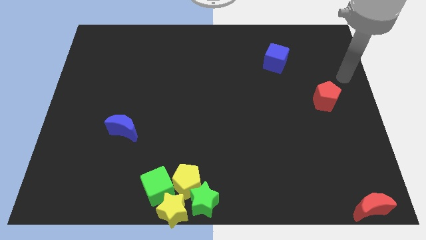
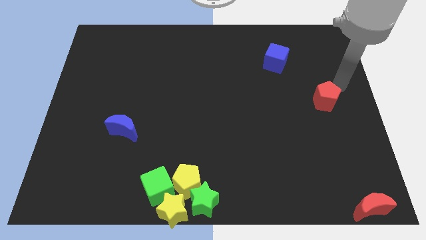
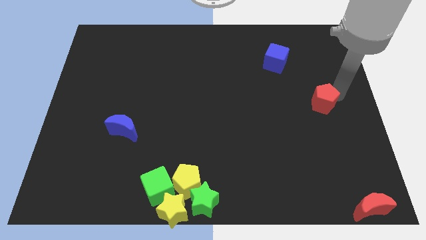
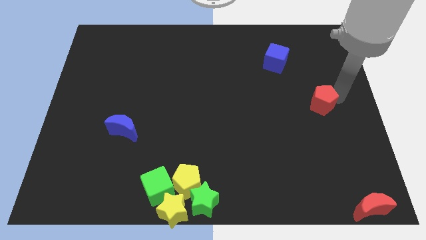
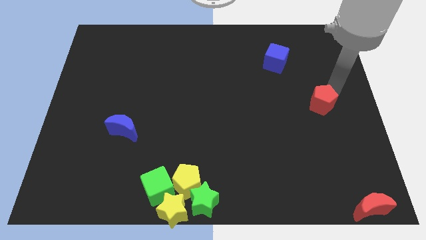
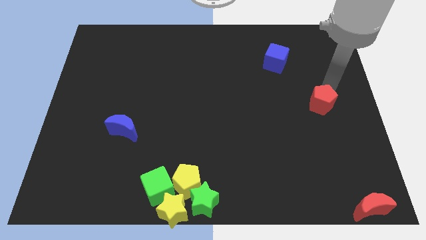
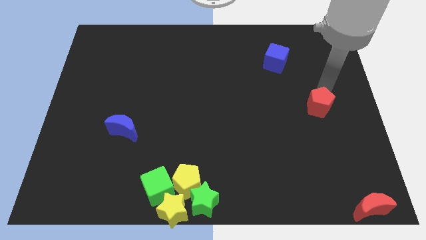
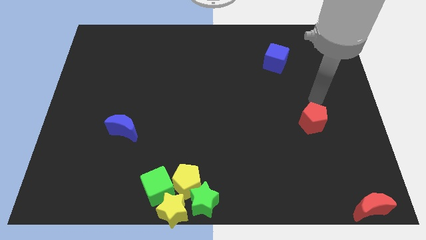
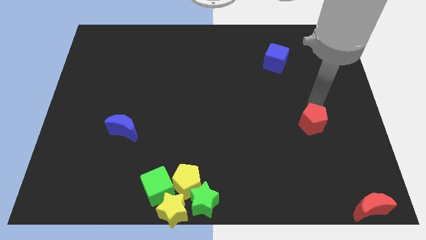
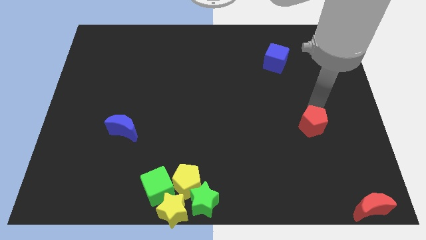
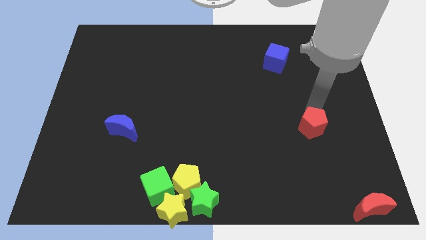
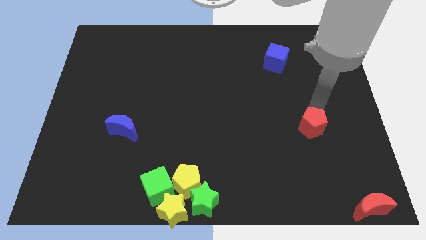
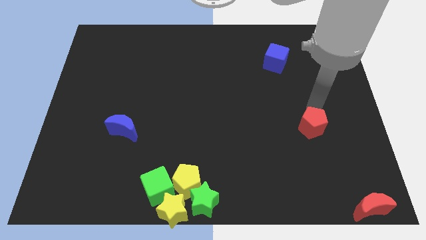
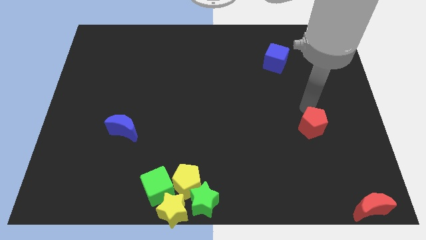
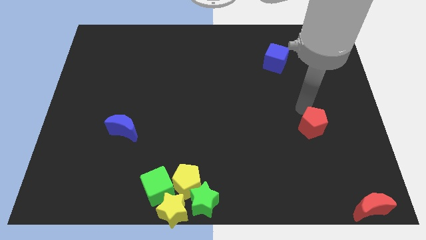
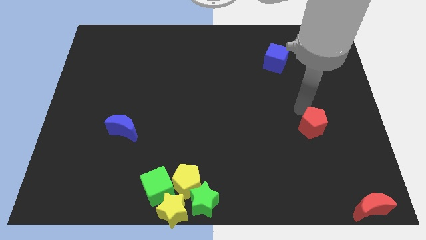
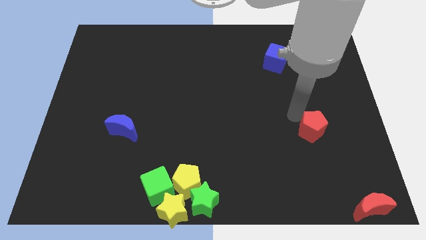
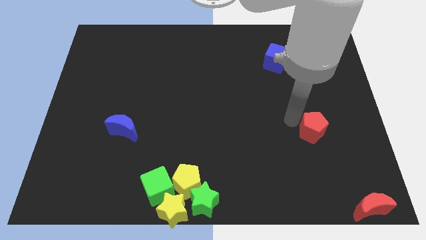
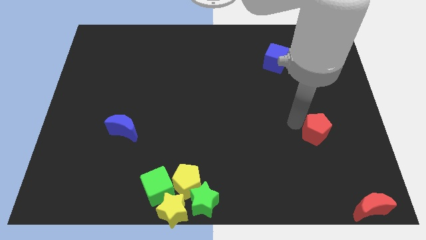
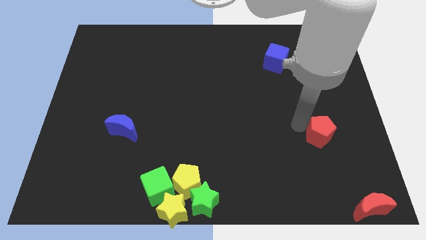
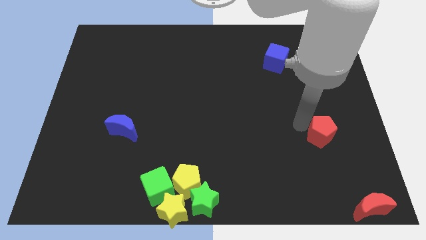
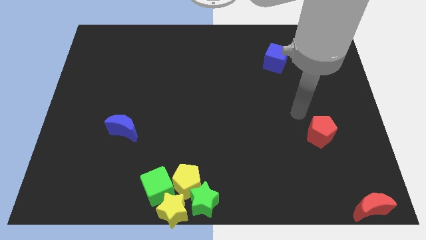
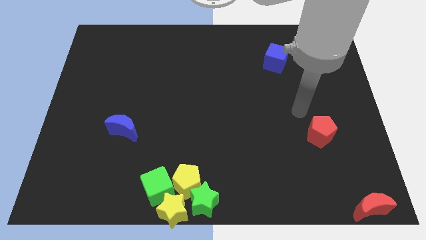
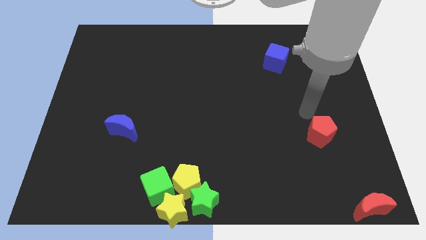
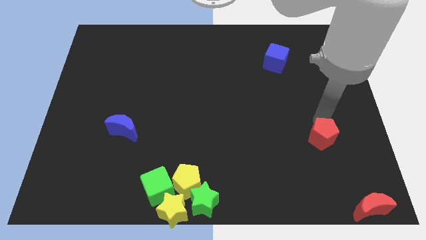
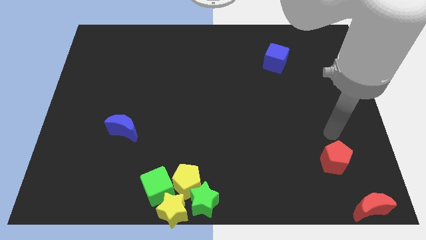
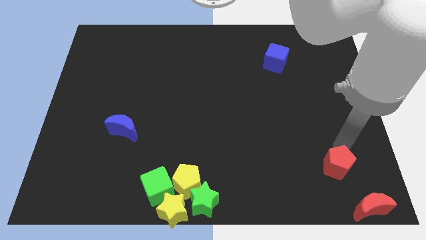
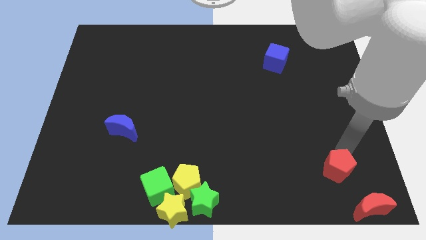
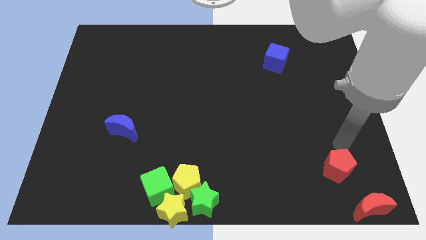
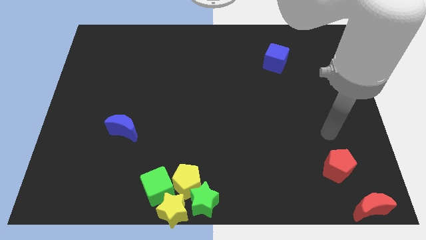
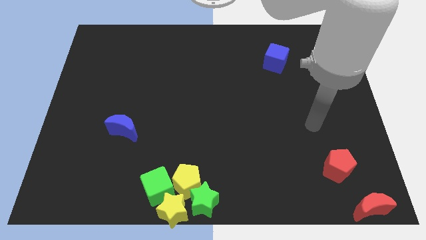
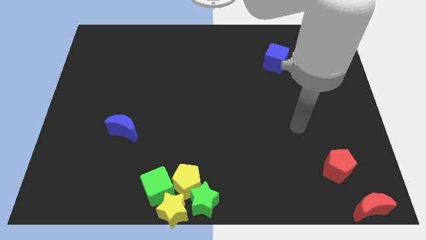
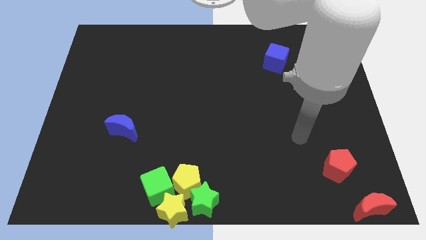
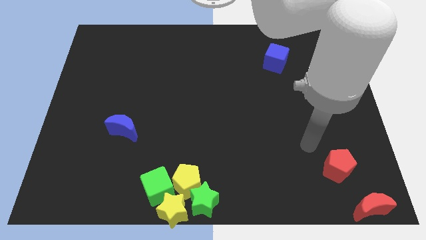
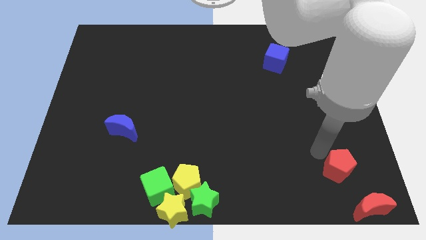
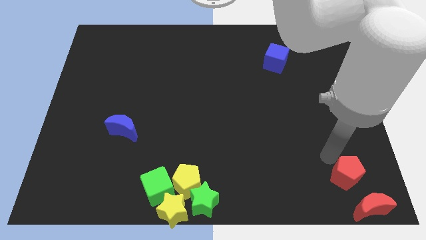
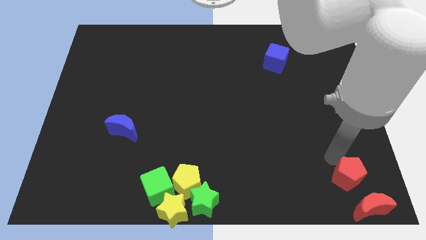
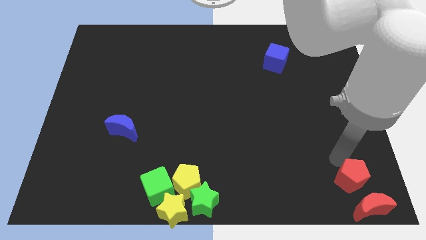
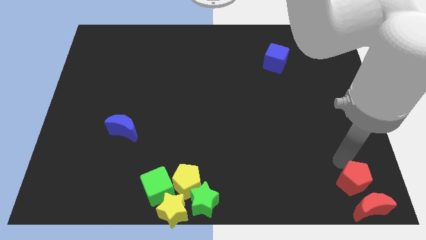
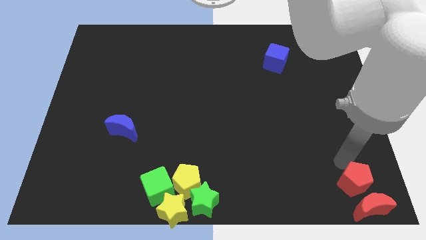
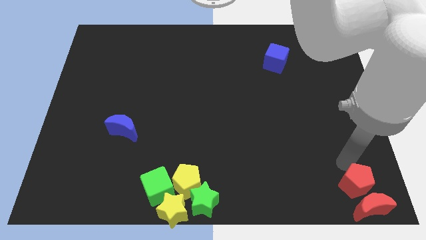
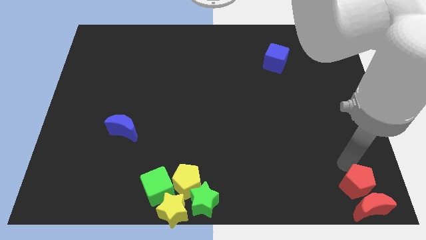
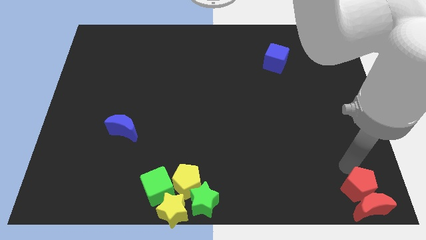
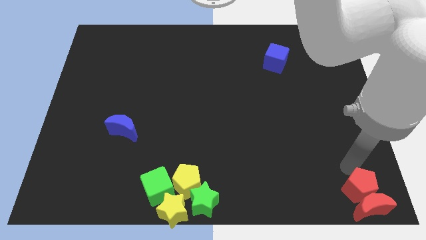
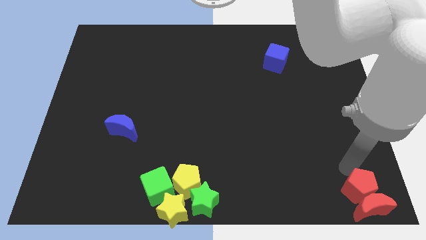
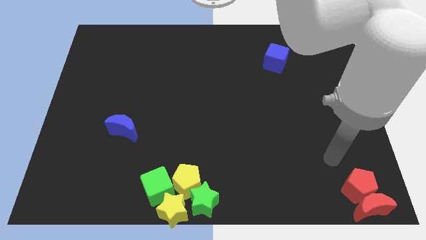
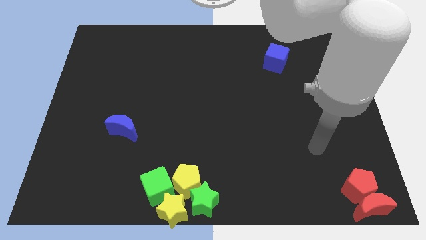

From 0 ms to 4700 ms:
move the red pentagon into red moon

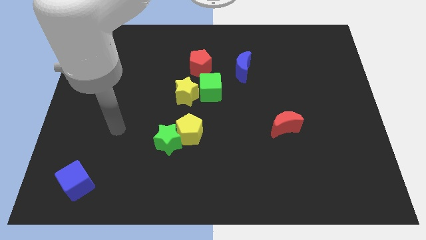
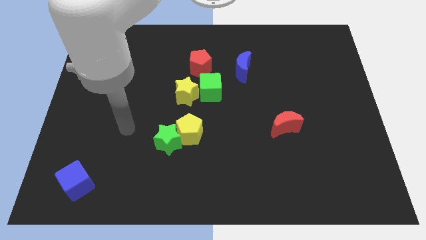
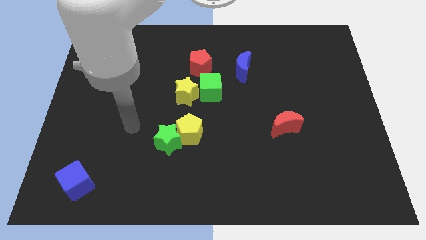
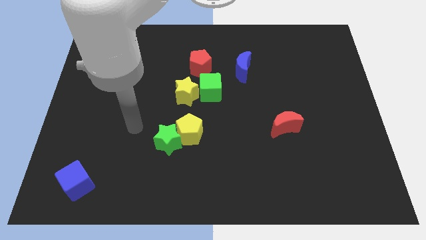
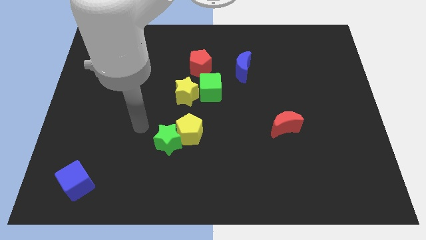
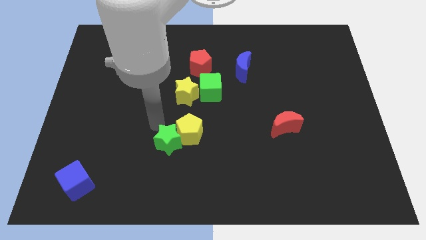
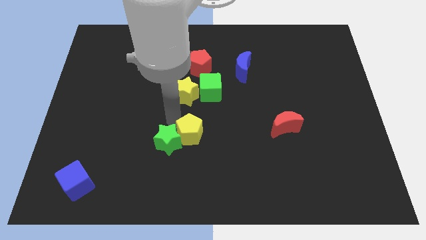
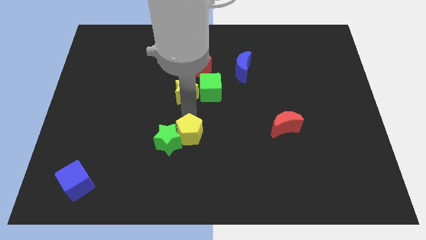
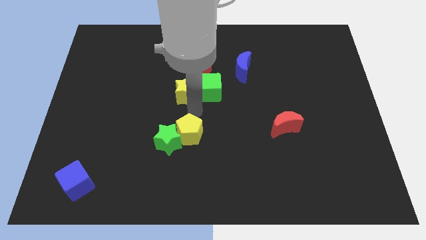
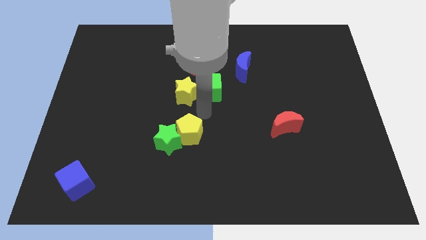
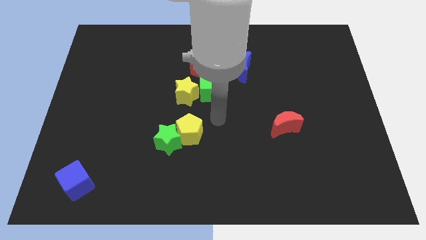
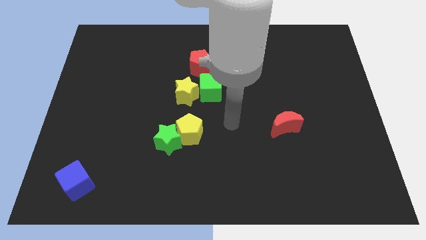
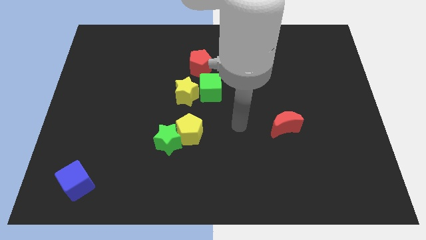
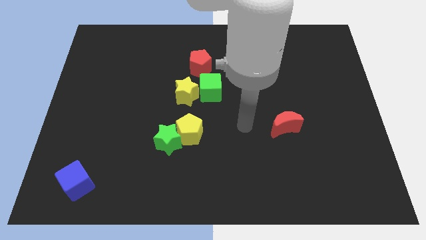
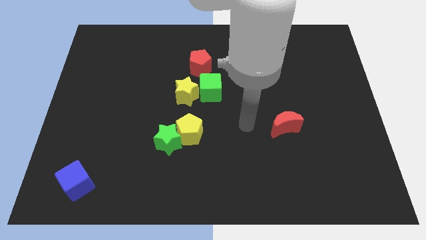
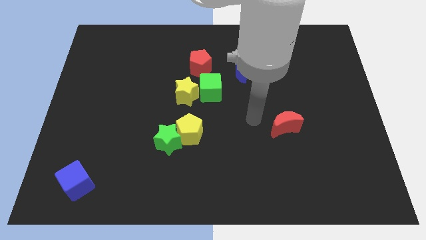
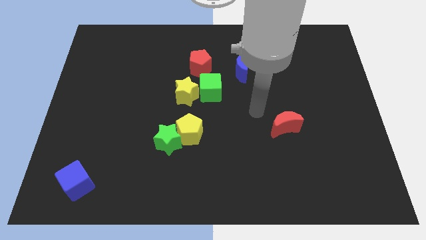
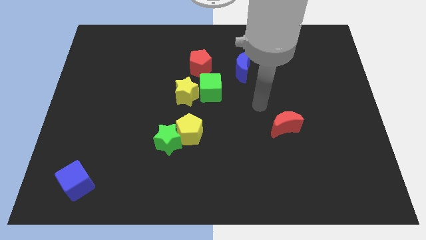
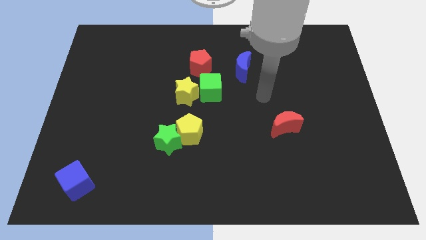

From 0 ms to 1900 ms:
put your arm in between the blue moon and red moon

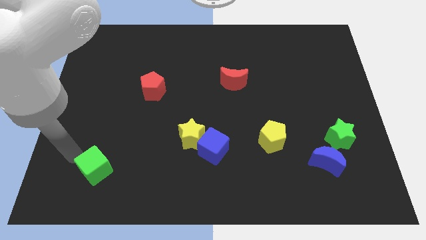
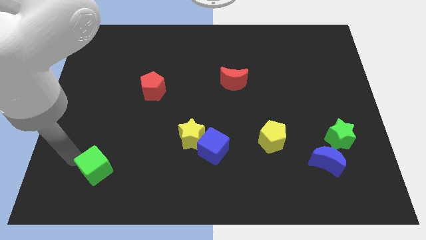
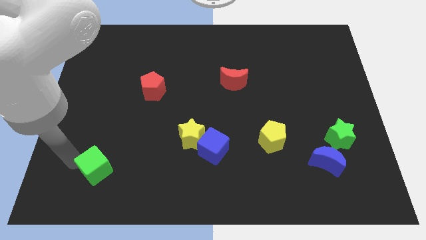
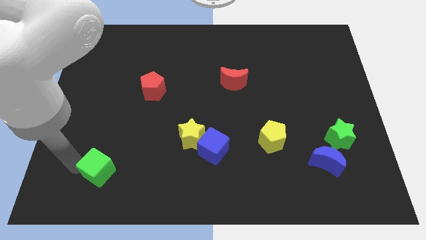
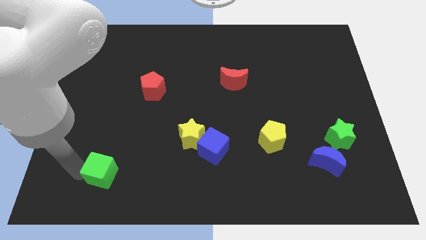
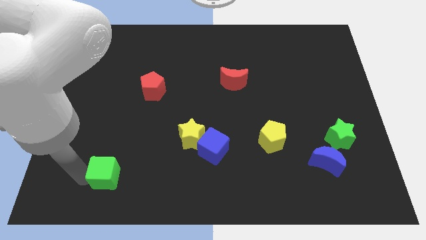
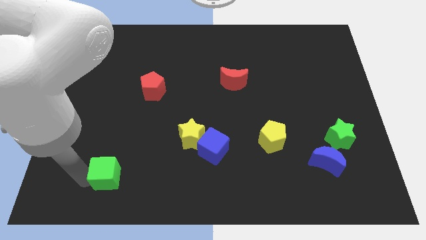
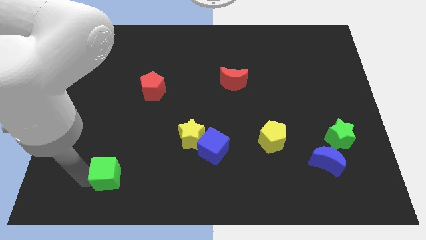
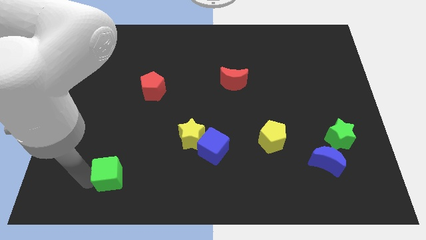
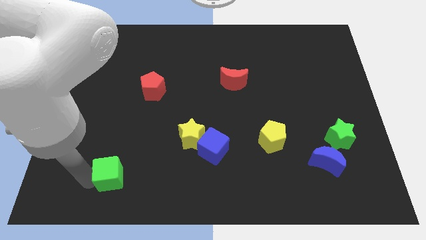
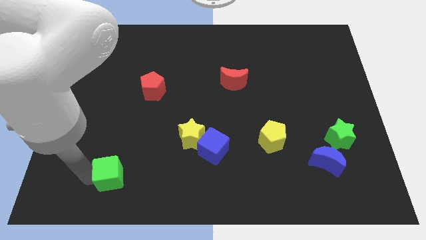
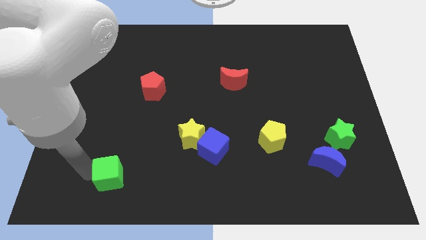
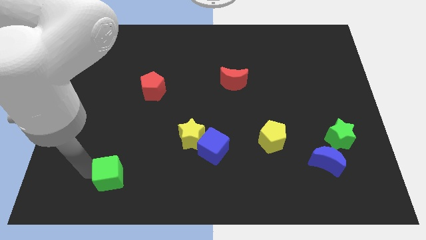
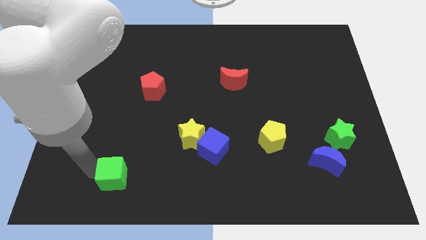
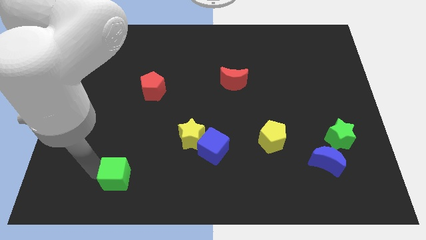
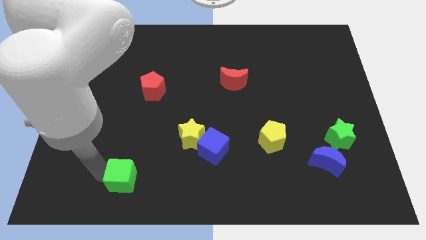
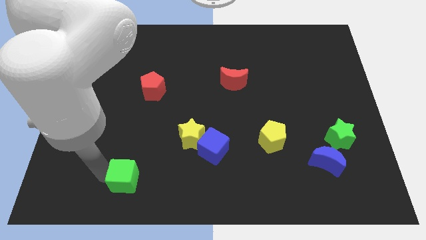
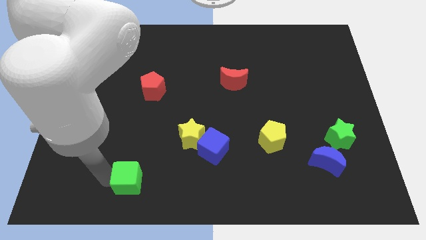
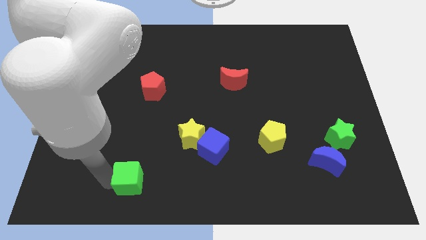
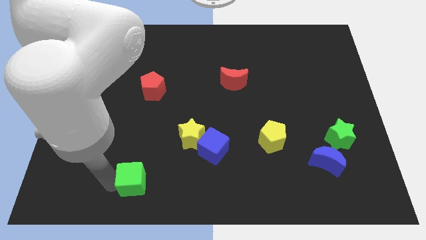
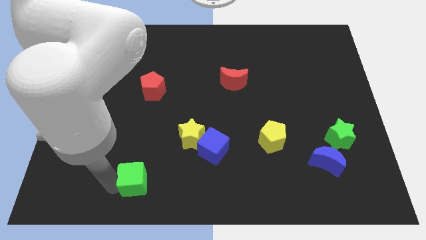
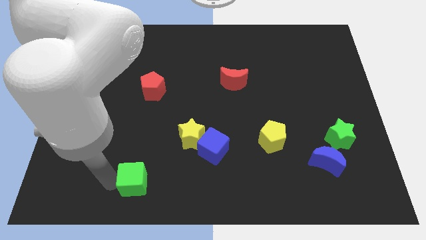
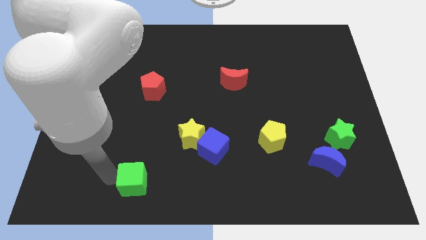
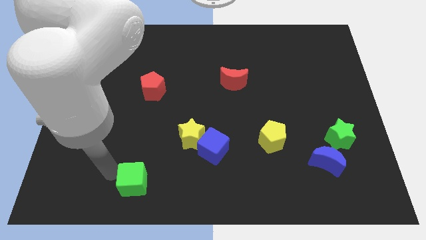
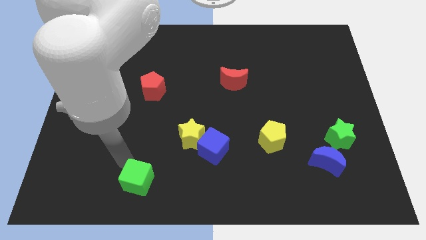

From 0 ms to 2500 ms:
move the green cube slightly to the right
